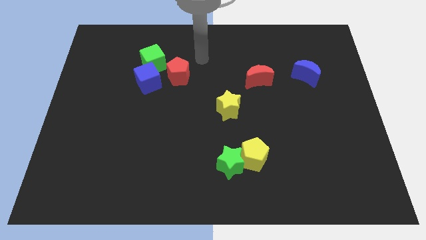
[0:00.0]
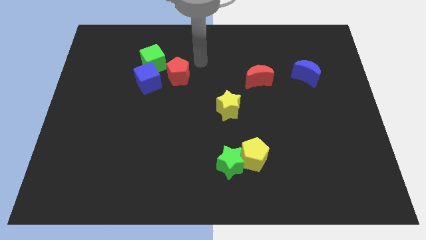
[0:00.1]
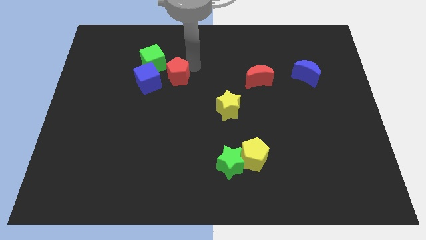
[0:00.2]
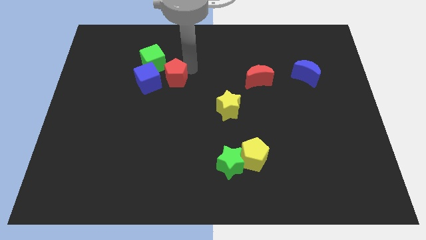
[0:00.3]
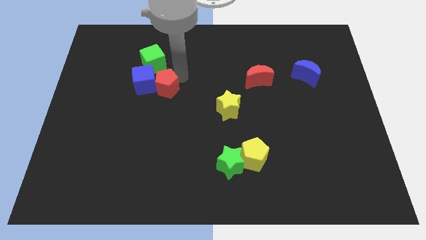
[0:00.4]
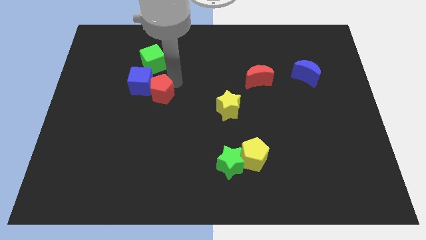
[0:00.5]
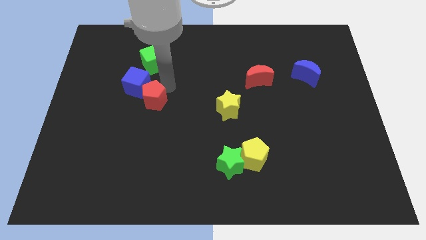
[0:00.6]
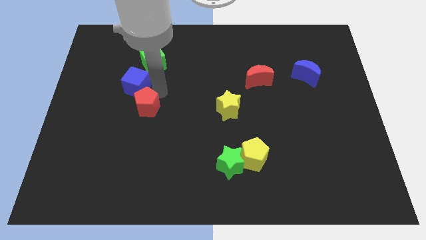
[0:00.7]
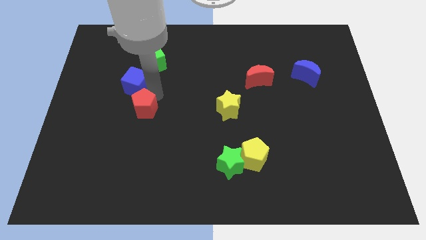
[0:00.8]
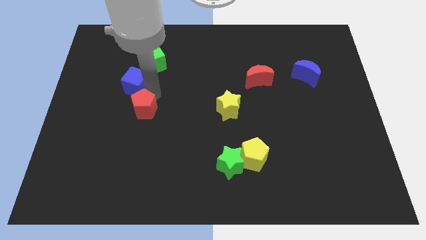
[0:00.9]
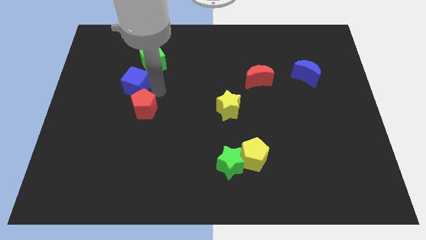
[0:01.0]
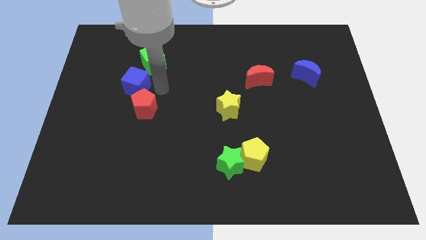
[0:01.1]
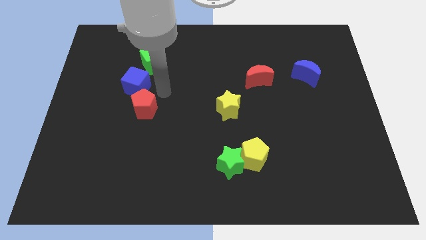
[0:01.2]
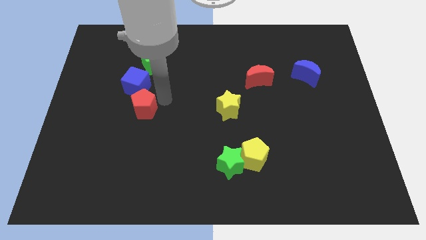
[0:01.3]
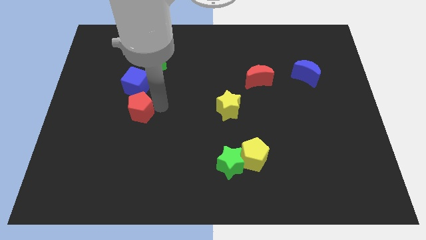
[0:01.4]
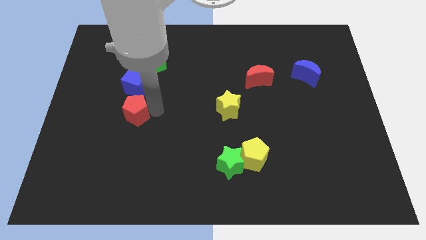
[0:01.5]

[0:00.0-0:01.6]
place the red pentagon below the blue cube

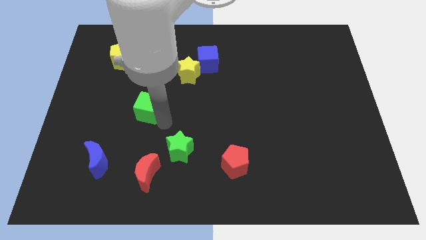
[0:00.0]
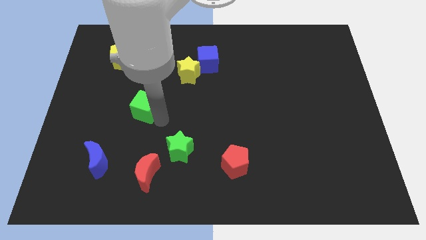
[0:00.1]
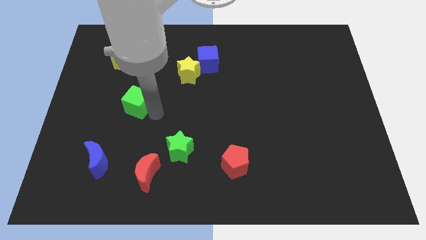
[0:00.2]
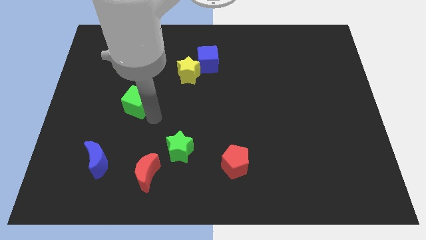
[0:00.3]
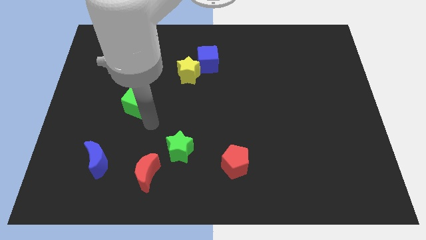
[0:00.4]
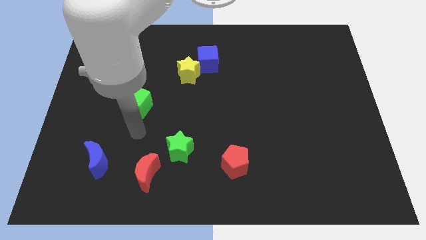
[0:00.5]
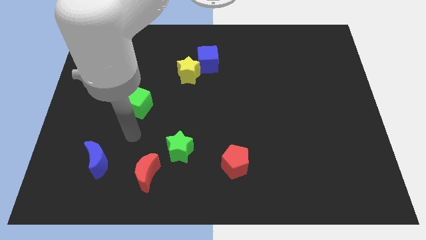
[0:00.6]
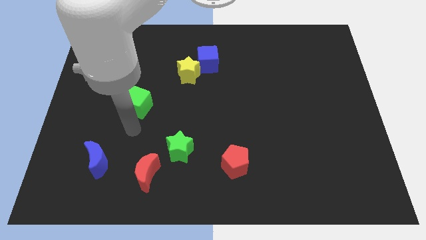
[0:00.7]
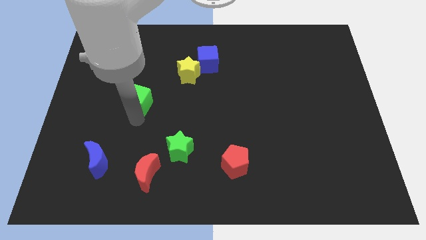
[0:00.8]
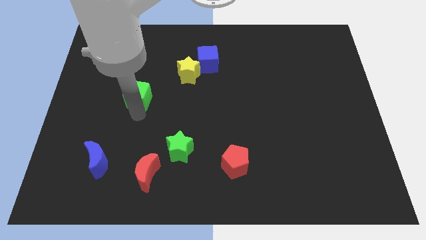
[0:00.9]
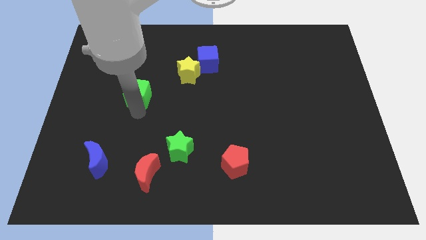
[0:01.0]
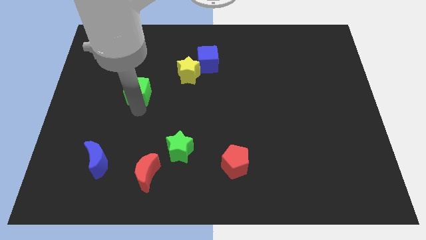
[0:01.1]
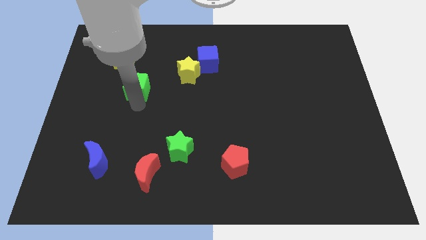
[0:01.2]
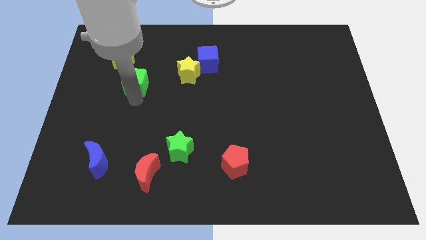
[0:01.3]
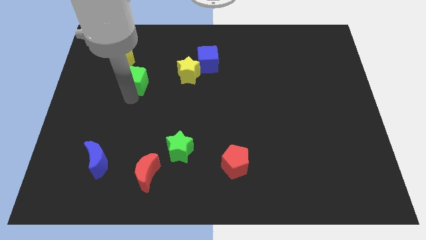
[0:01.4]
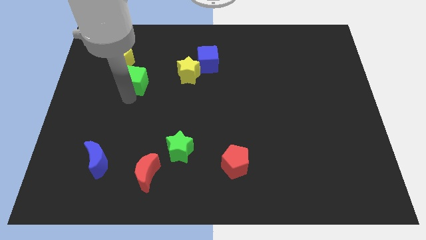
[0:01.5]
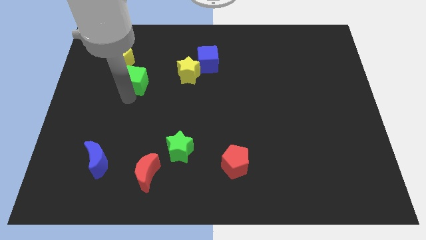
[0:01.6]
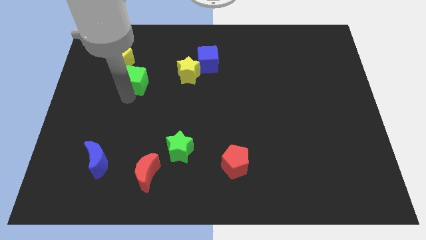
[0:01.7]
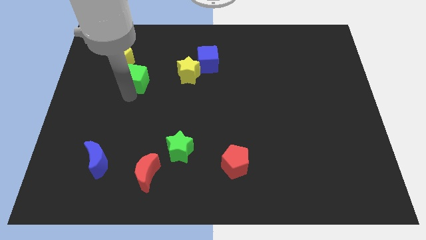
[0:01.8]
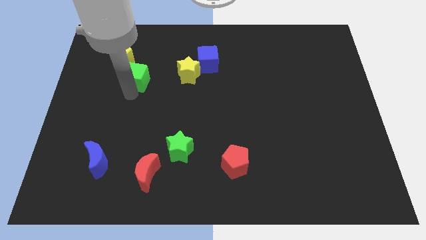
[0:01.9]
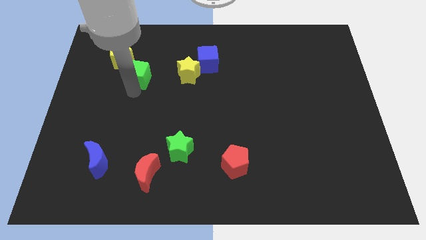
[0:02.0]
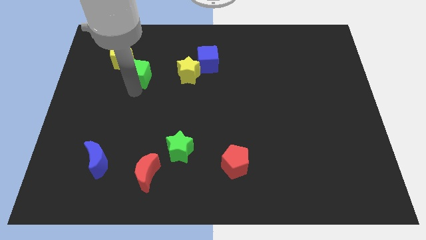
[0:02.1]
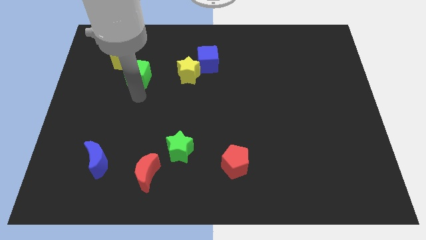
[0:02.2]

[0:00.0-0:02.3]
move the green cube to the bottom right of the yellow pentagon

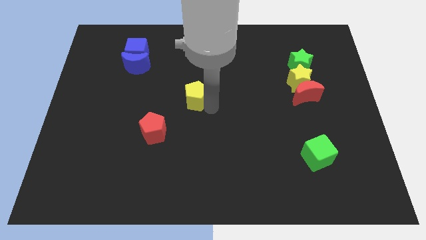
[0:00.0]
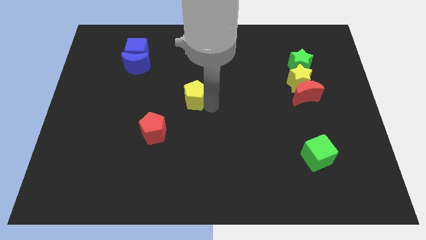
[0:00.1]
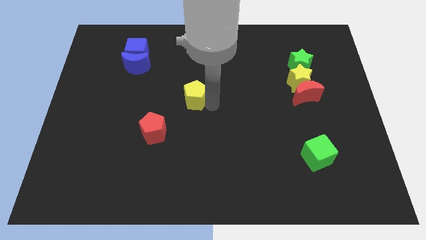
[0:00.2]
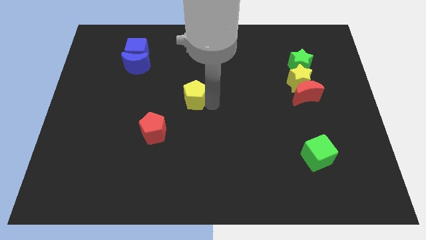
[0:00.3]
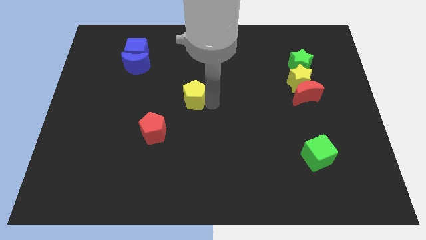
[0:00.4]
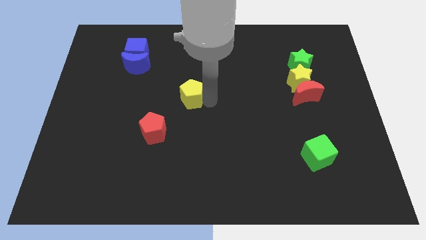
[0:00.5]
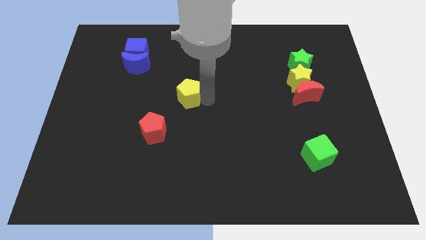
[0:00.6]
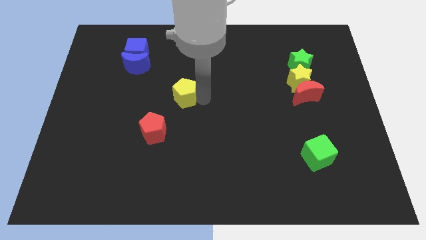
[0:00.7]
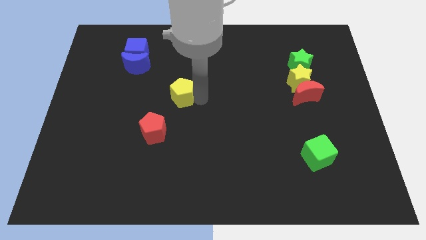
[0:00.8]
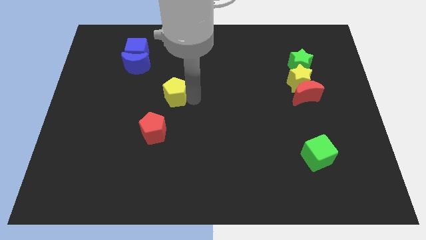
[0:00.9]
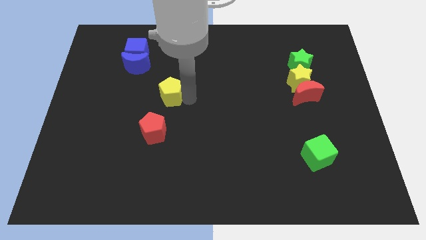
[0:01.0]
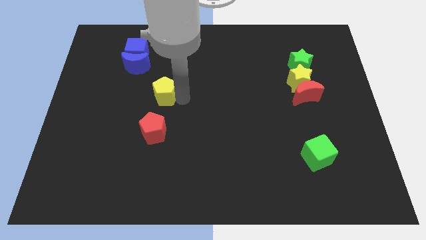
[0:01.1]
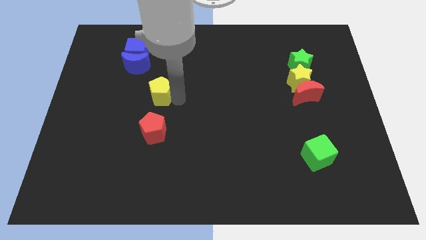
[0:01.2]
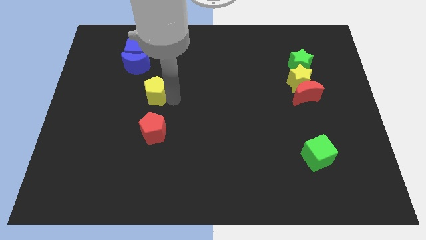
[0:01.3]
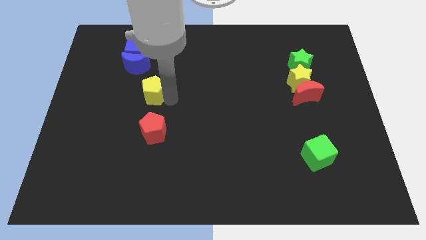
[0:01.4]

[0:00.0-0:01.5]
push the yellow pentagon to the top of the red pentagon

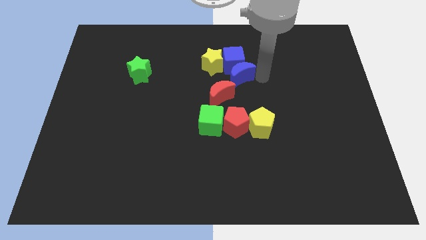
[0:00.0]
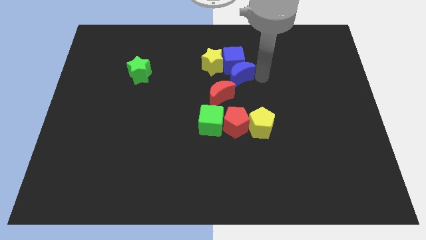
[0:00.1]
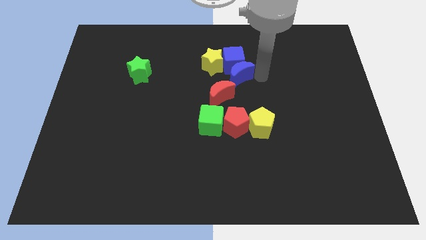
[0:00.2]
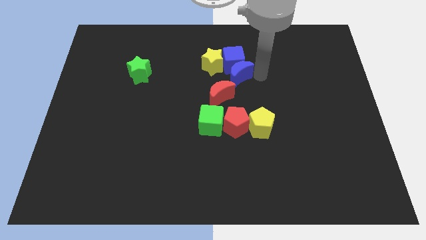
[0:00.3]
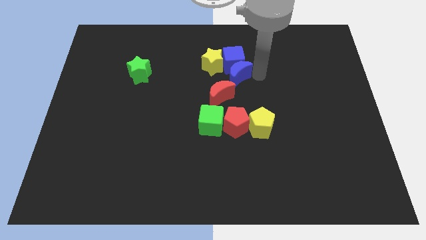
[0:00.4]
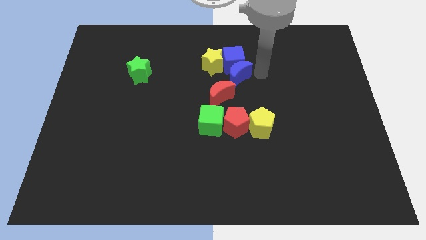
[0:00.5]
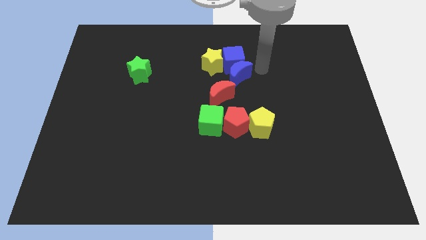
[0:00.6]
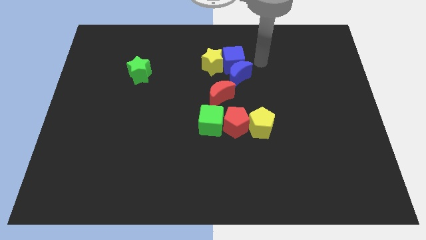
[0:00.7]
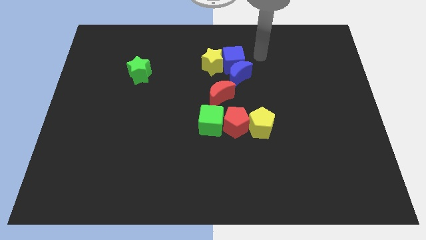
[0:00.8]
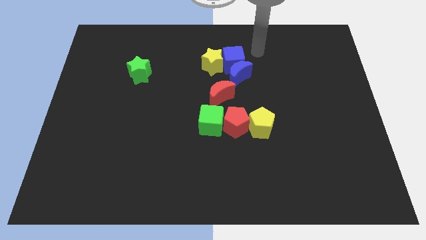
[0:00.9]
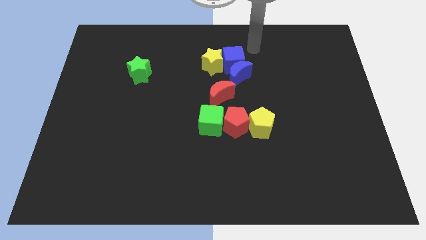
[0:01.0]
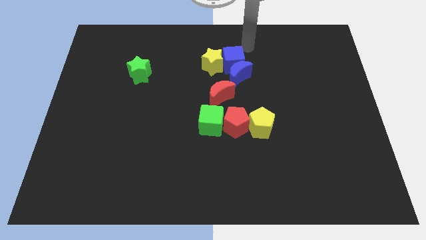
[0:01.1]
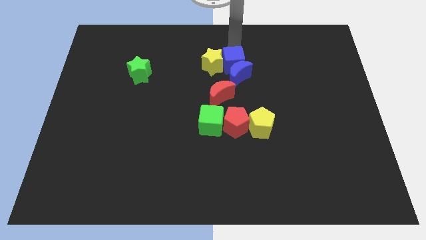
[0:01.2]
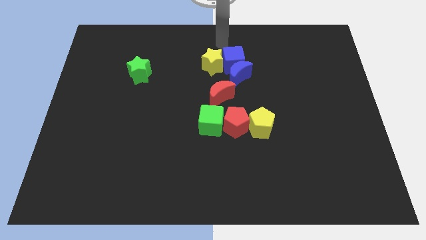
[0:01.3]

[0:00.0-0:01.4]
move your arm towards the yellow star

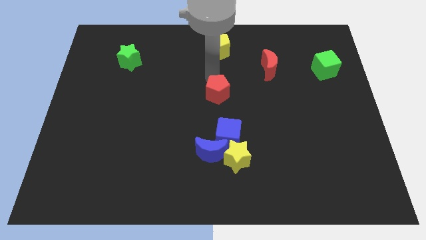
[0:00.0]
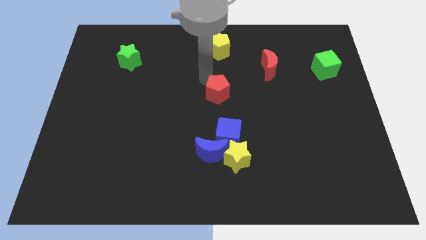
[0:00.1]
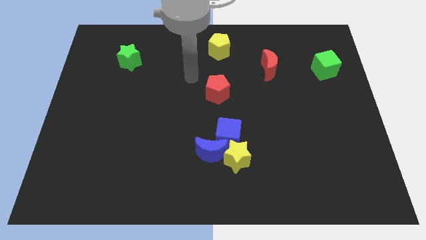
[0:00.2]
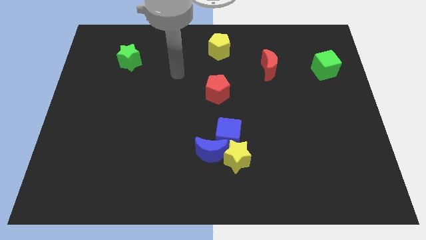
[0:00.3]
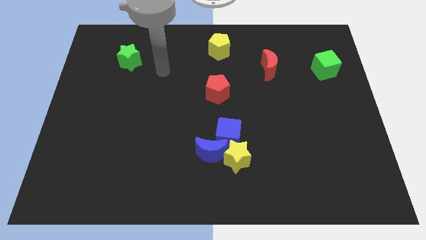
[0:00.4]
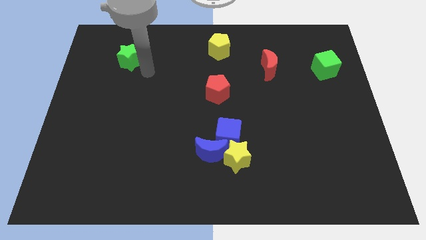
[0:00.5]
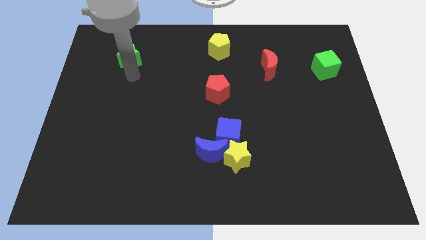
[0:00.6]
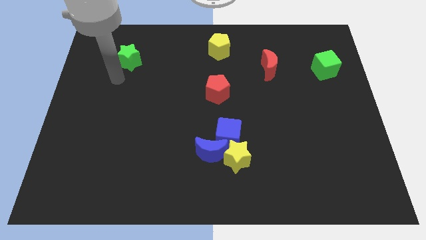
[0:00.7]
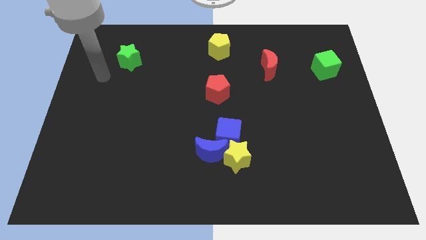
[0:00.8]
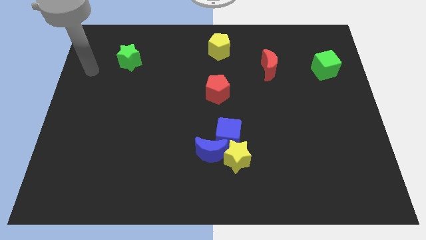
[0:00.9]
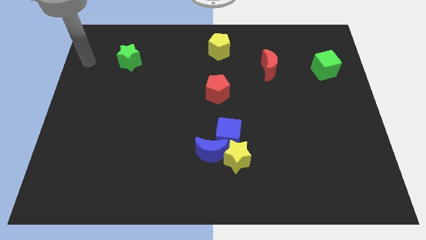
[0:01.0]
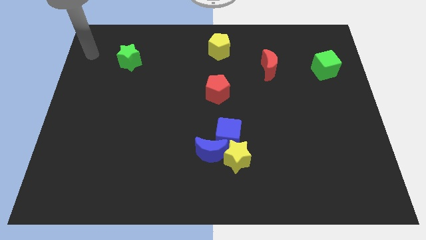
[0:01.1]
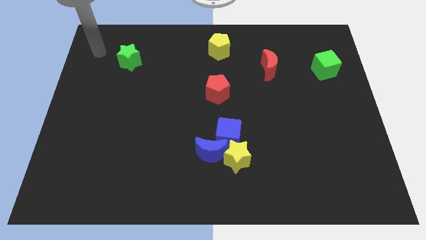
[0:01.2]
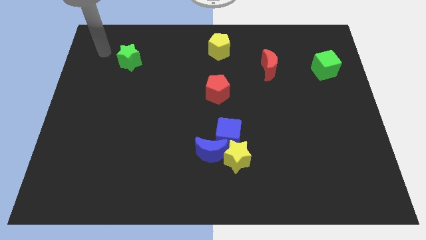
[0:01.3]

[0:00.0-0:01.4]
point your arm at the left of the green star

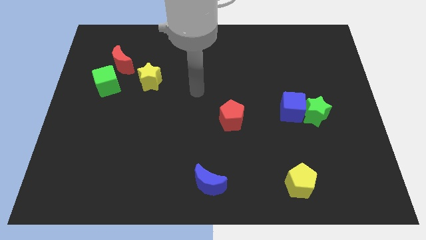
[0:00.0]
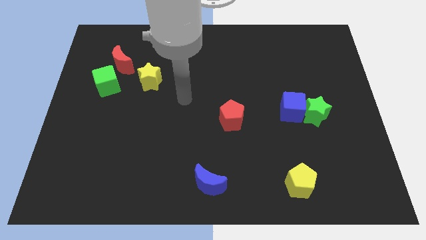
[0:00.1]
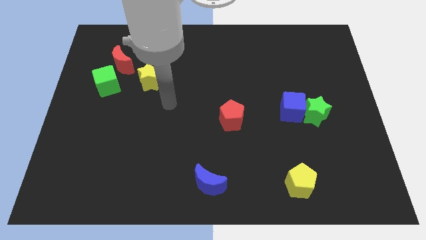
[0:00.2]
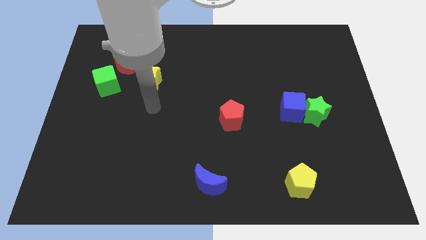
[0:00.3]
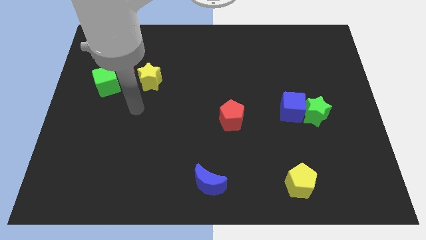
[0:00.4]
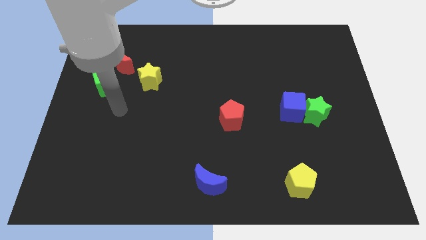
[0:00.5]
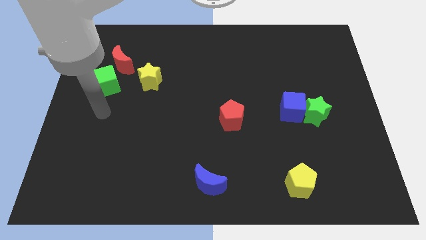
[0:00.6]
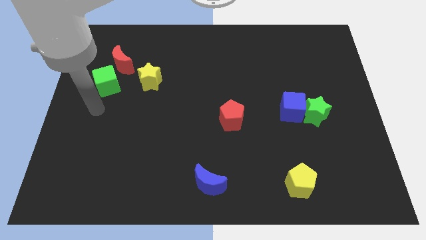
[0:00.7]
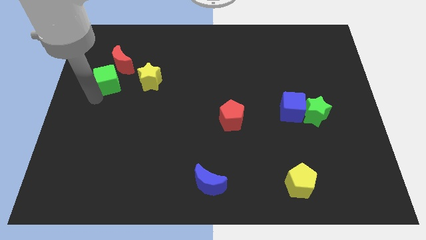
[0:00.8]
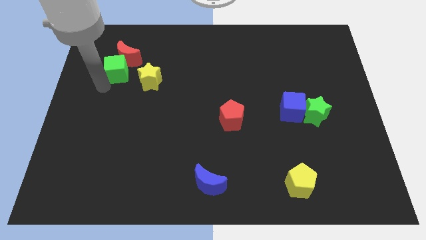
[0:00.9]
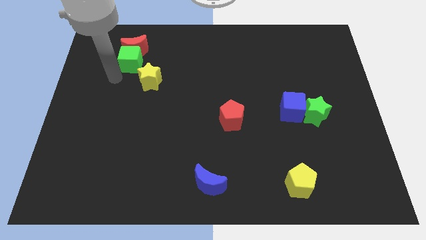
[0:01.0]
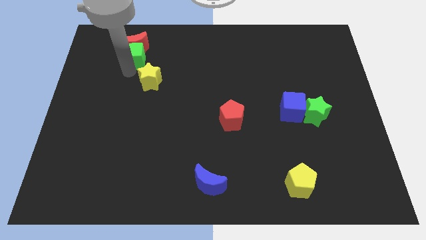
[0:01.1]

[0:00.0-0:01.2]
push green cube into the red moon
